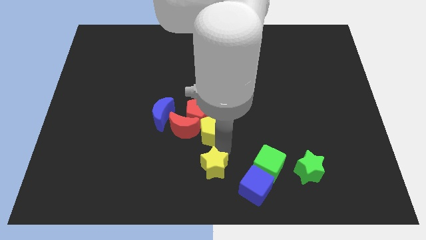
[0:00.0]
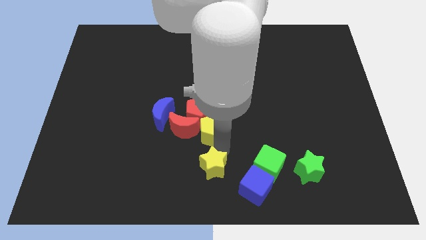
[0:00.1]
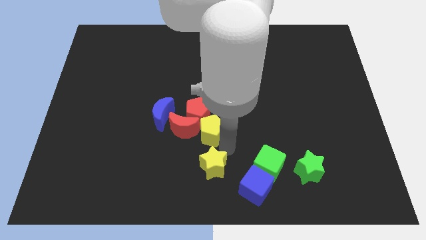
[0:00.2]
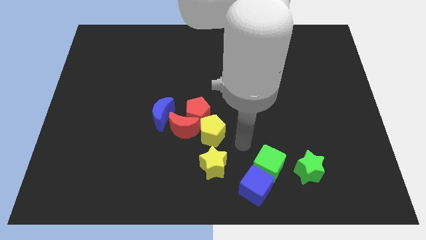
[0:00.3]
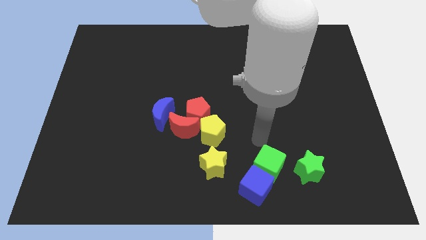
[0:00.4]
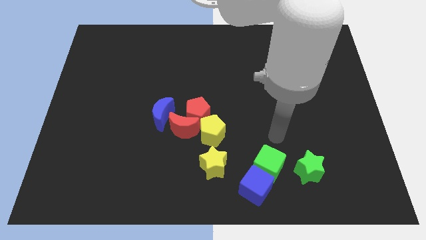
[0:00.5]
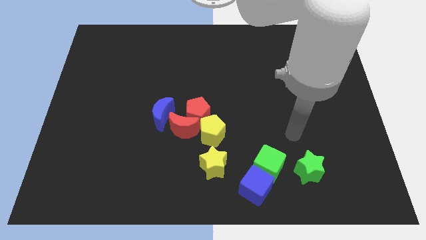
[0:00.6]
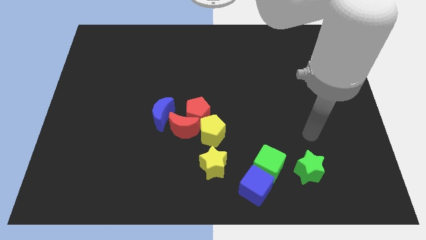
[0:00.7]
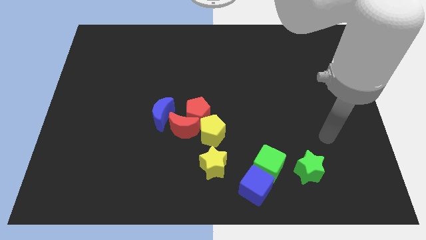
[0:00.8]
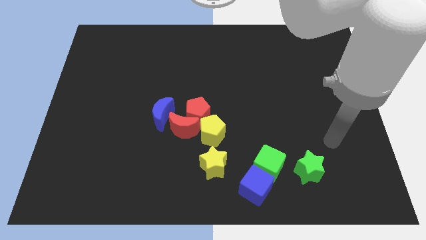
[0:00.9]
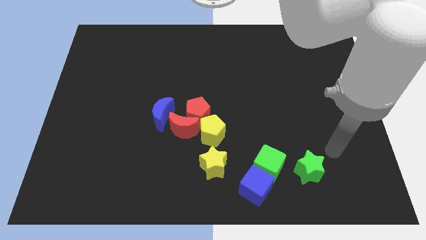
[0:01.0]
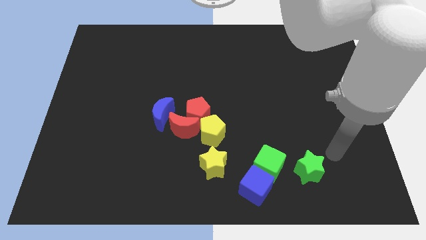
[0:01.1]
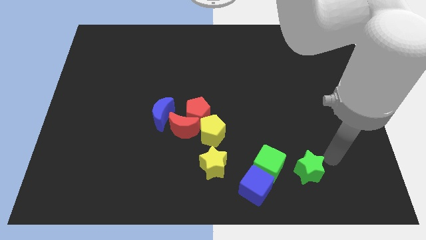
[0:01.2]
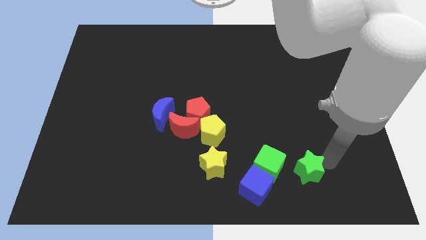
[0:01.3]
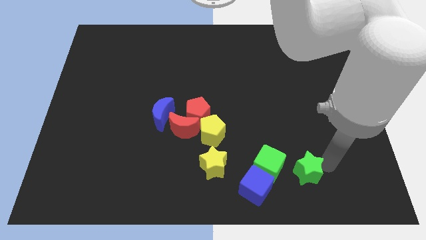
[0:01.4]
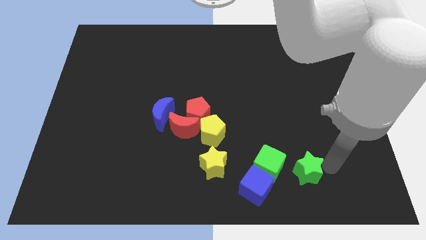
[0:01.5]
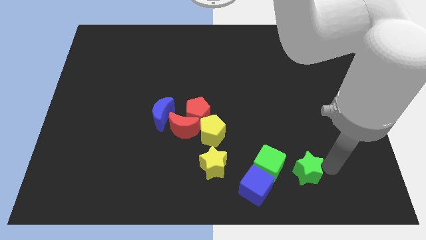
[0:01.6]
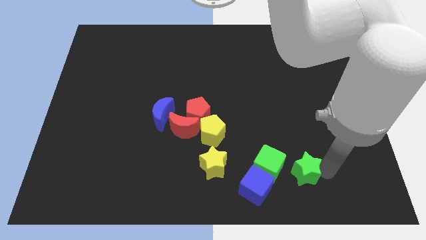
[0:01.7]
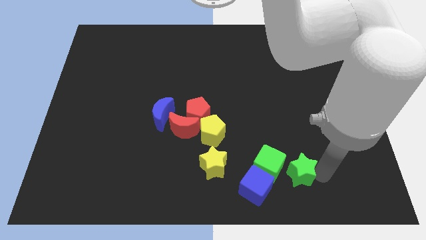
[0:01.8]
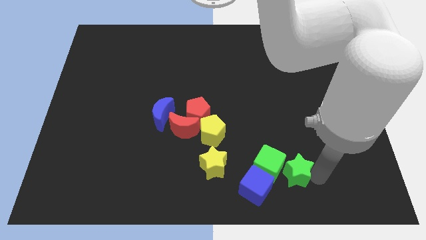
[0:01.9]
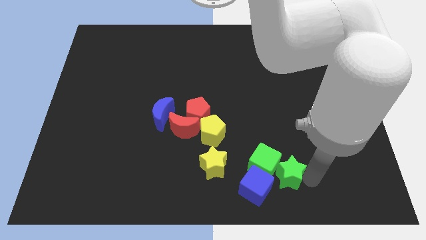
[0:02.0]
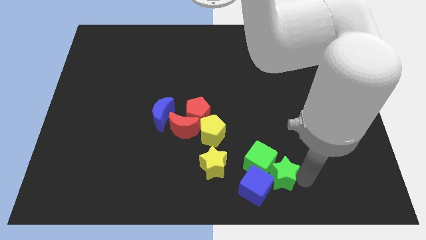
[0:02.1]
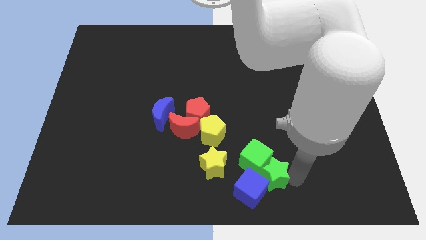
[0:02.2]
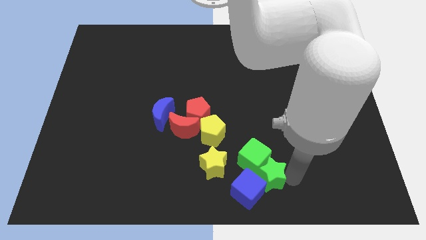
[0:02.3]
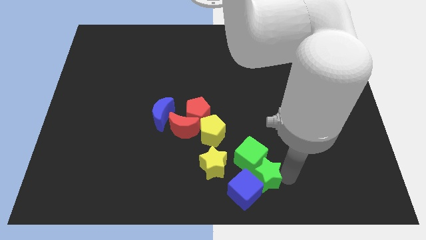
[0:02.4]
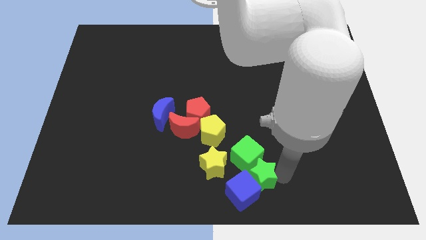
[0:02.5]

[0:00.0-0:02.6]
slightly move green star close to green cube

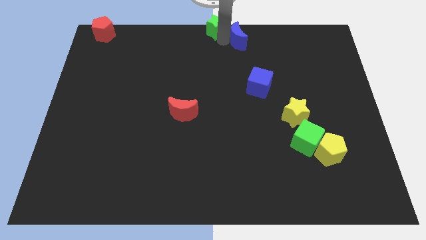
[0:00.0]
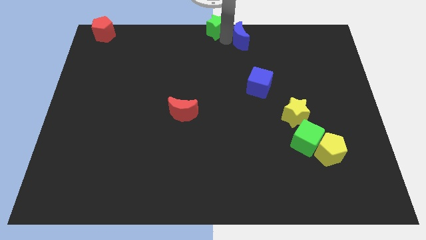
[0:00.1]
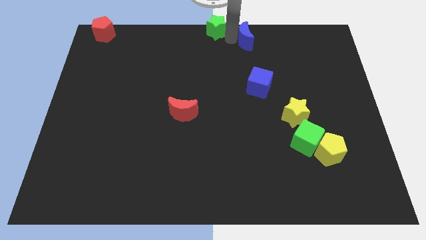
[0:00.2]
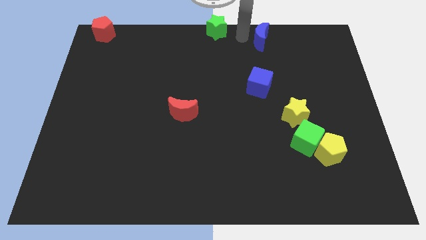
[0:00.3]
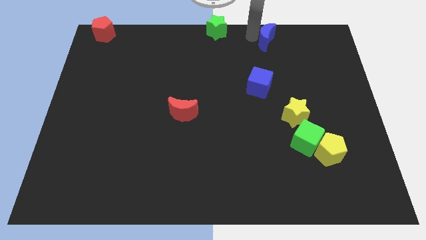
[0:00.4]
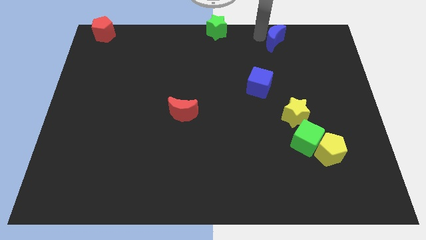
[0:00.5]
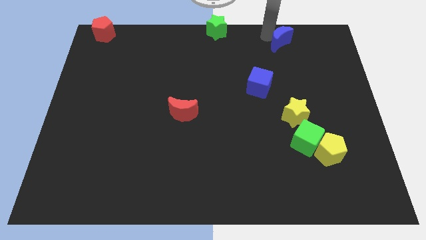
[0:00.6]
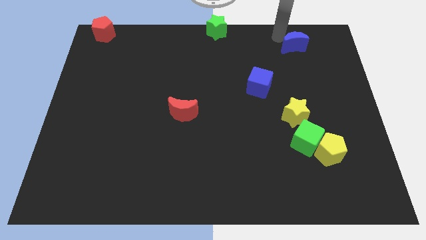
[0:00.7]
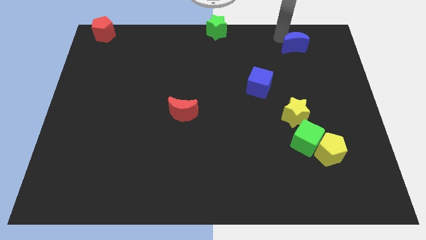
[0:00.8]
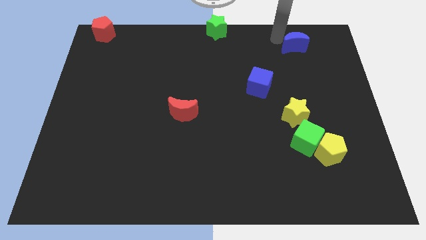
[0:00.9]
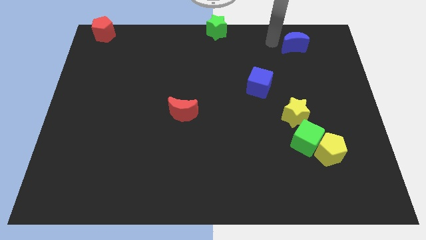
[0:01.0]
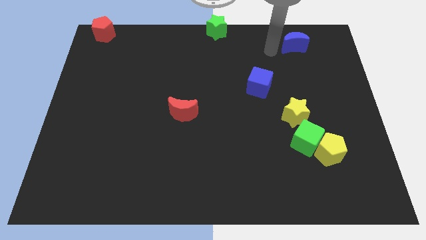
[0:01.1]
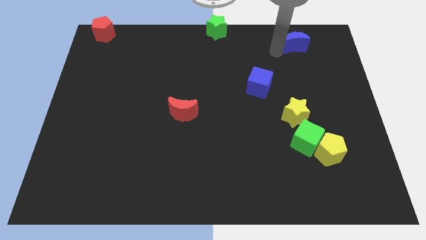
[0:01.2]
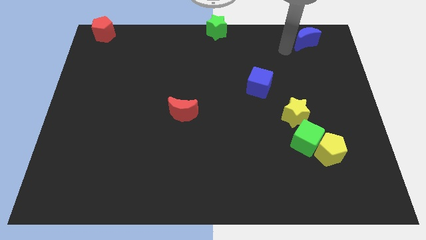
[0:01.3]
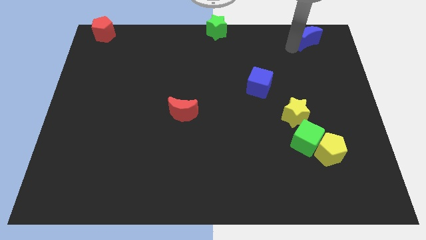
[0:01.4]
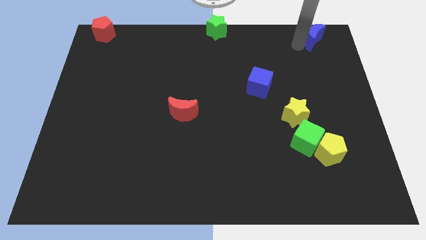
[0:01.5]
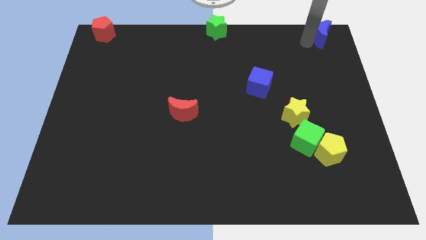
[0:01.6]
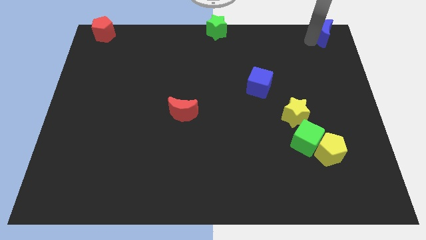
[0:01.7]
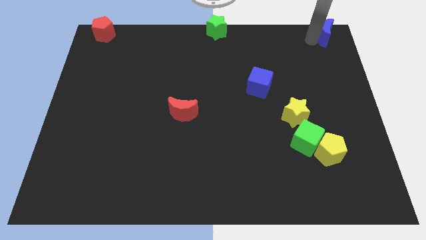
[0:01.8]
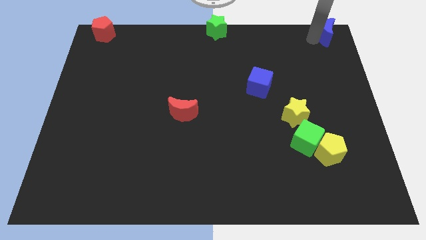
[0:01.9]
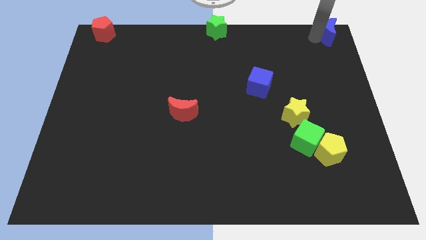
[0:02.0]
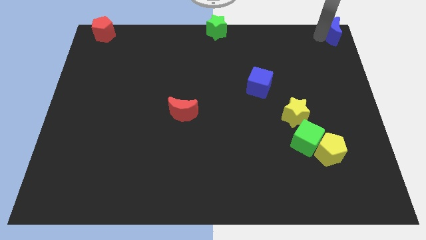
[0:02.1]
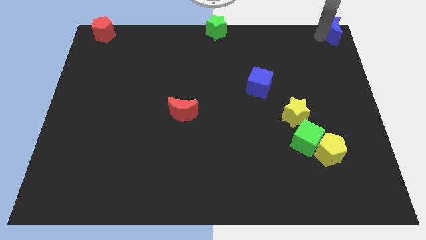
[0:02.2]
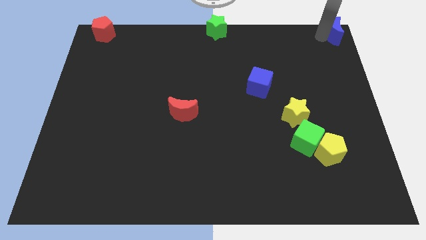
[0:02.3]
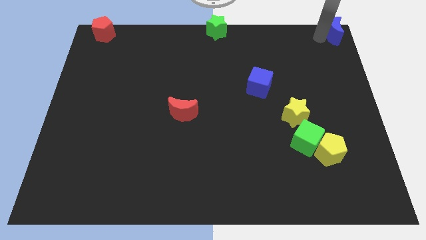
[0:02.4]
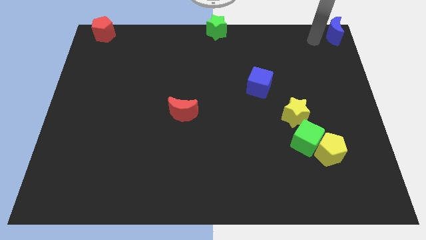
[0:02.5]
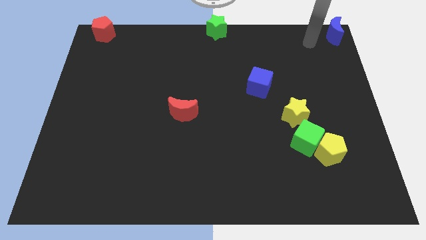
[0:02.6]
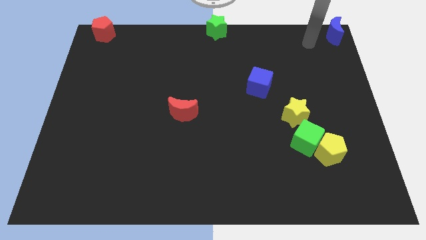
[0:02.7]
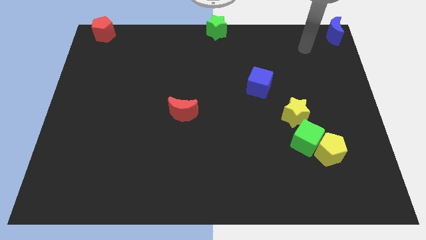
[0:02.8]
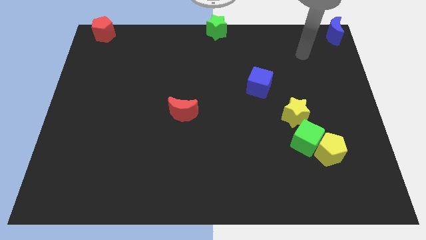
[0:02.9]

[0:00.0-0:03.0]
move the blue moon to the top right corner of the board

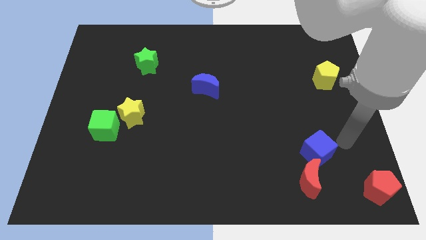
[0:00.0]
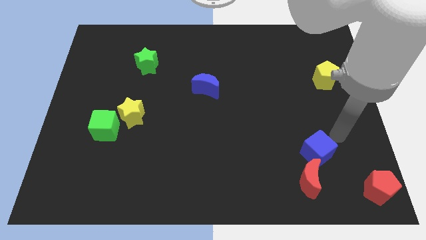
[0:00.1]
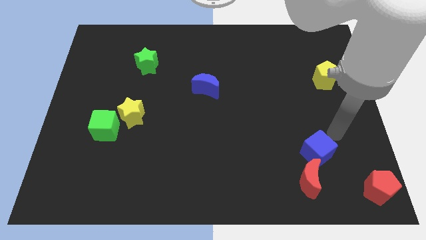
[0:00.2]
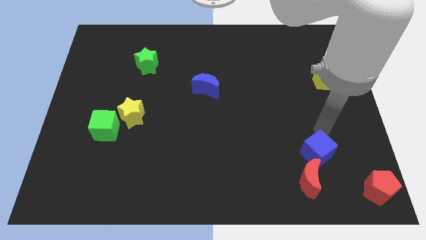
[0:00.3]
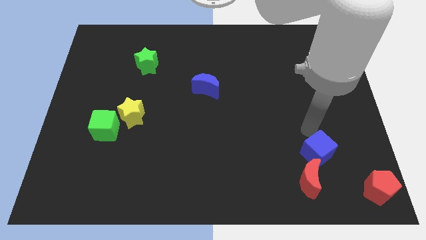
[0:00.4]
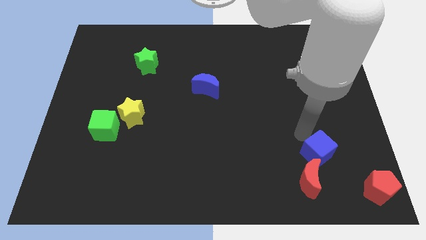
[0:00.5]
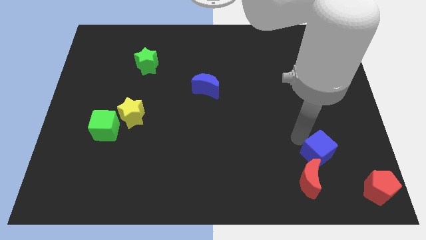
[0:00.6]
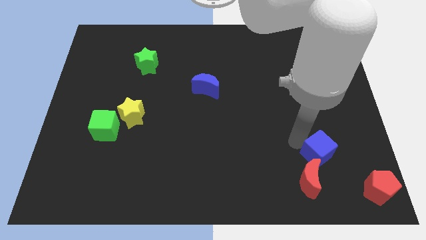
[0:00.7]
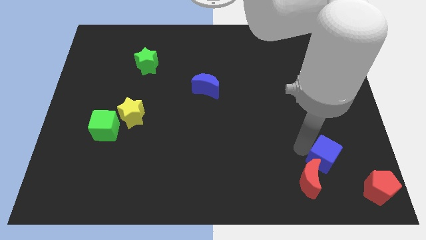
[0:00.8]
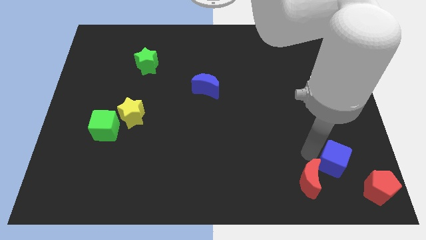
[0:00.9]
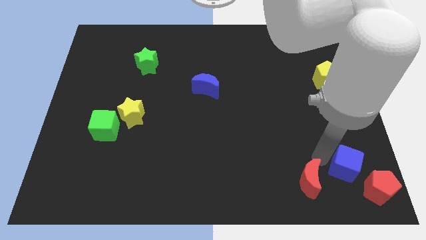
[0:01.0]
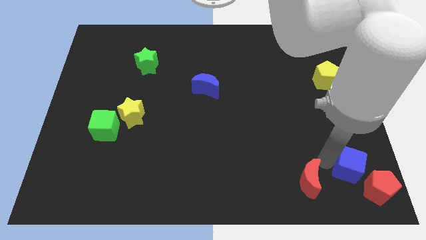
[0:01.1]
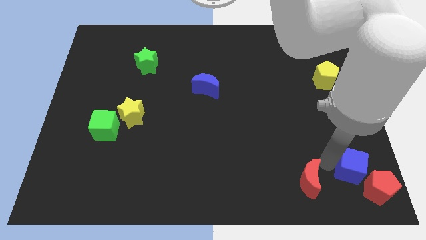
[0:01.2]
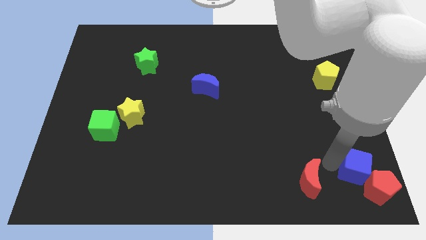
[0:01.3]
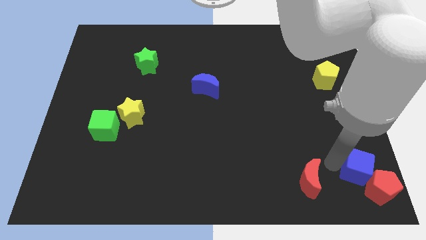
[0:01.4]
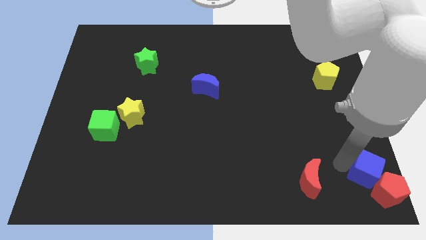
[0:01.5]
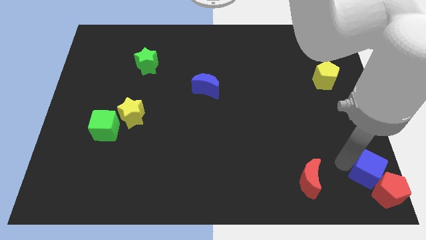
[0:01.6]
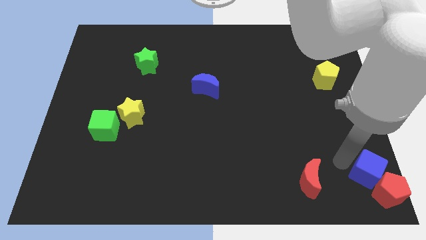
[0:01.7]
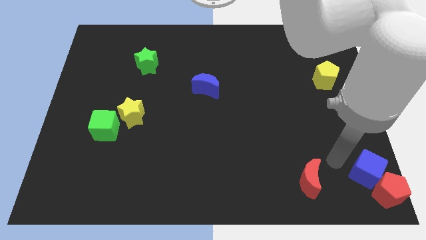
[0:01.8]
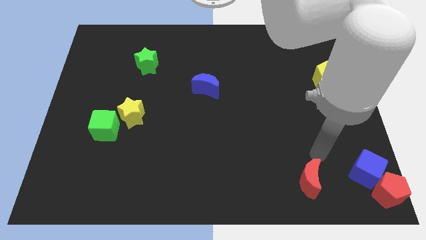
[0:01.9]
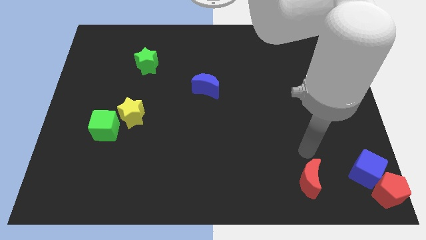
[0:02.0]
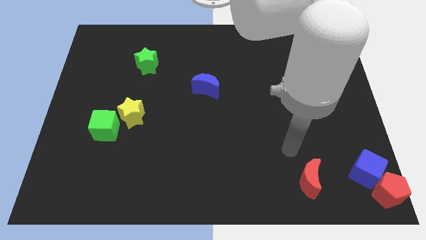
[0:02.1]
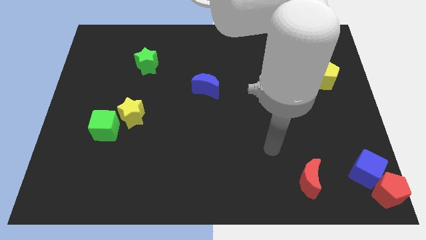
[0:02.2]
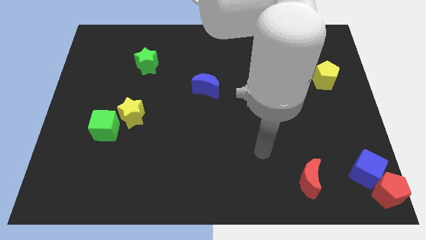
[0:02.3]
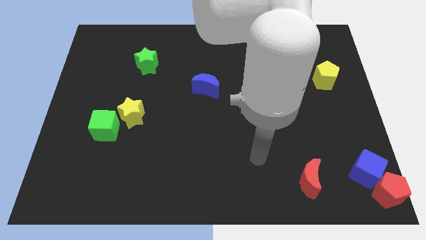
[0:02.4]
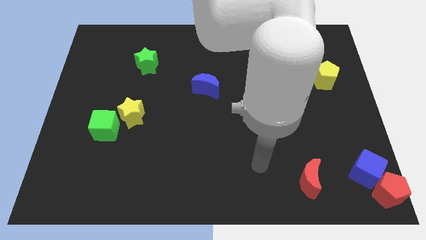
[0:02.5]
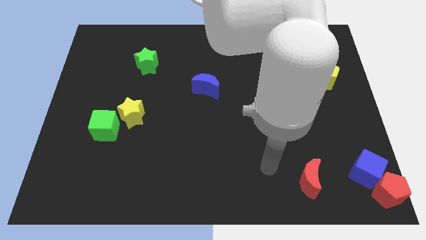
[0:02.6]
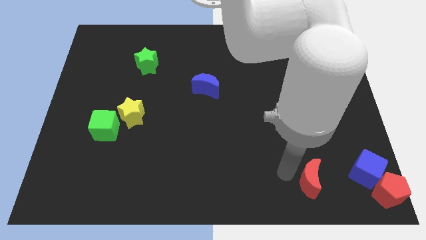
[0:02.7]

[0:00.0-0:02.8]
attach the blue cube to the red pentagon

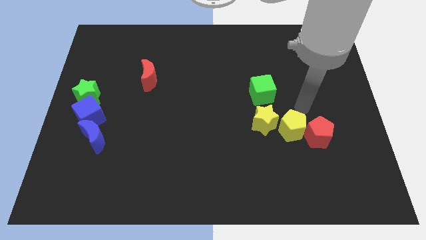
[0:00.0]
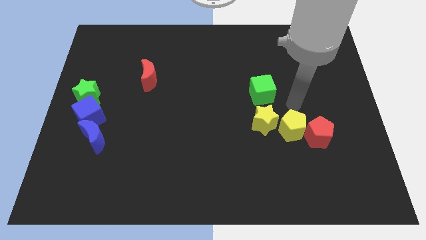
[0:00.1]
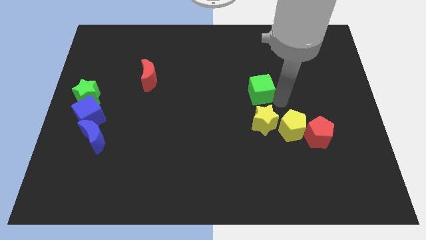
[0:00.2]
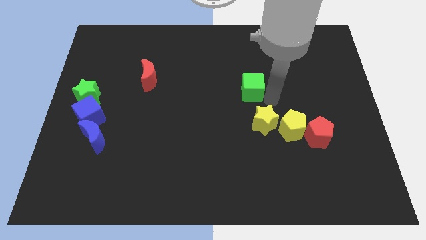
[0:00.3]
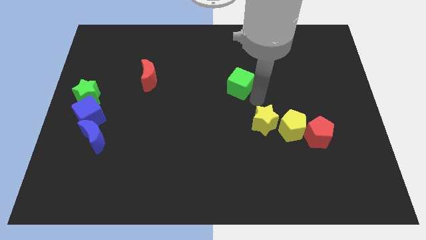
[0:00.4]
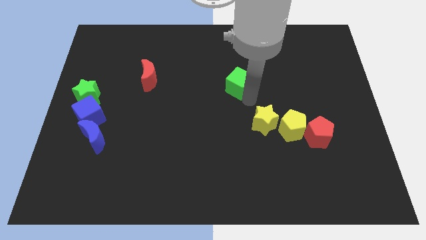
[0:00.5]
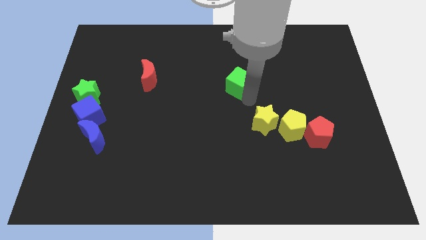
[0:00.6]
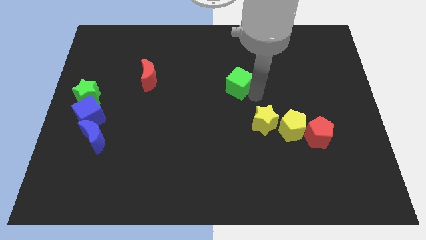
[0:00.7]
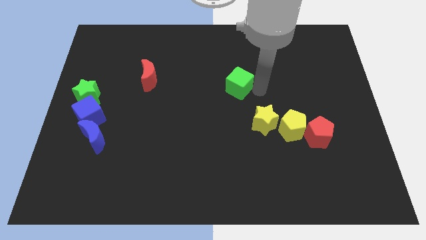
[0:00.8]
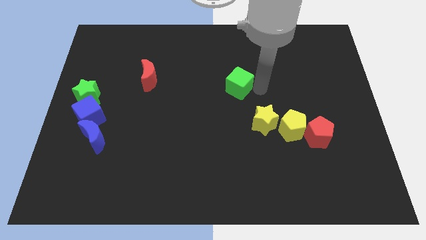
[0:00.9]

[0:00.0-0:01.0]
move the green cube to the top left of the yellow star
